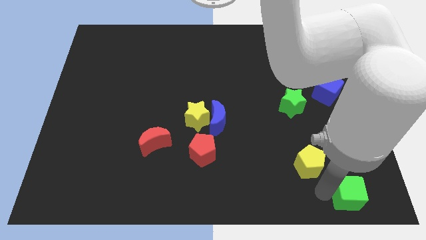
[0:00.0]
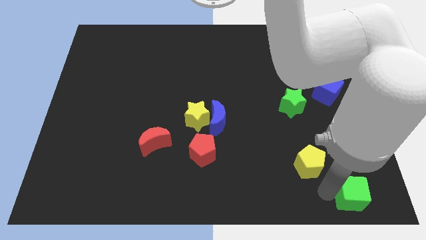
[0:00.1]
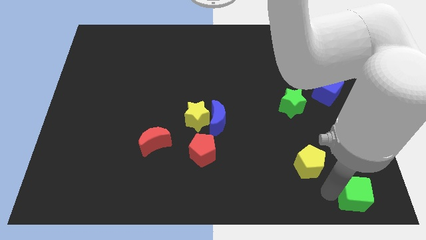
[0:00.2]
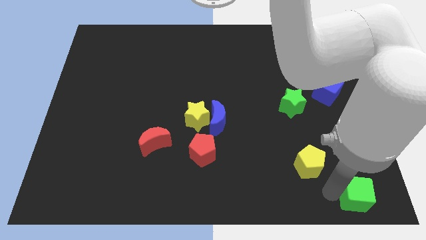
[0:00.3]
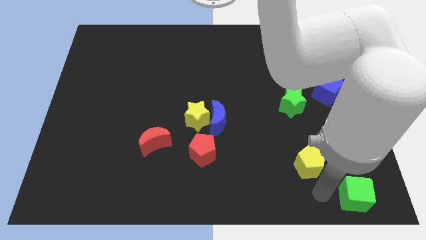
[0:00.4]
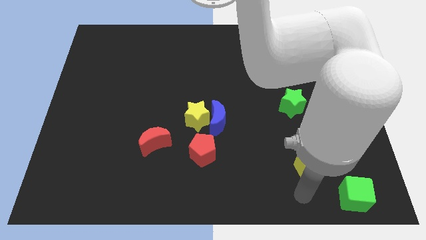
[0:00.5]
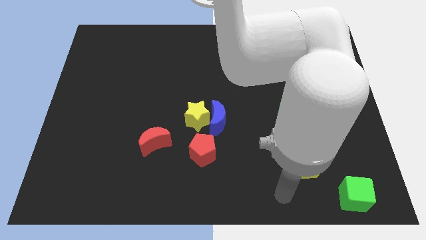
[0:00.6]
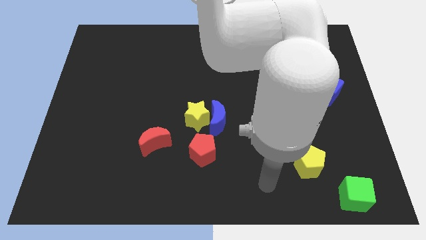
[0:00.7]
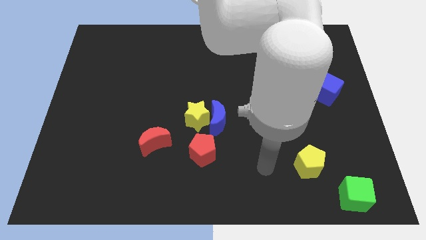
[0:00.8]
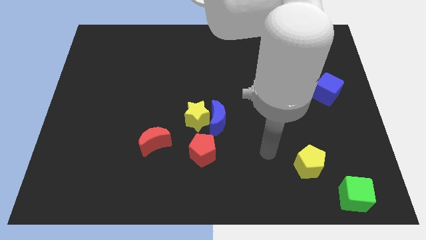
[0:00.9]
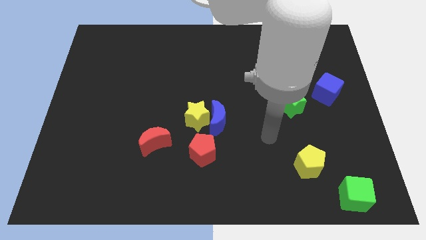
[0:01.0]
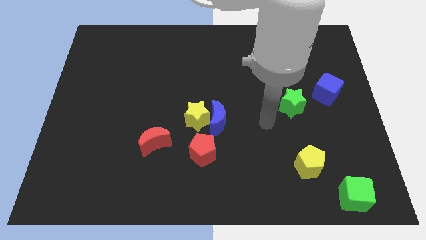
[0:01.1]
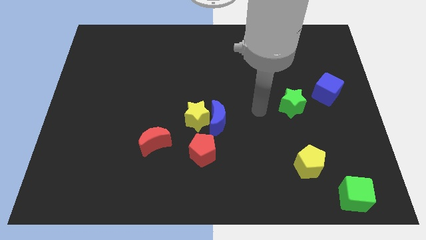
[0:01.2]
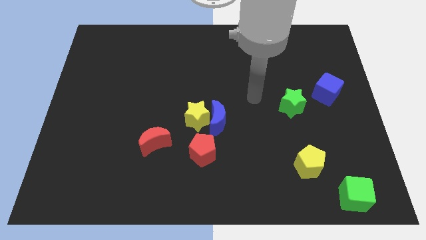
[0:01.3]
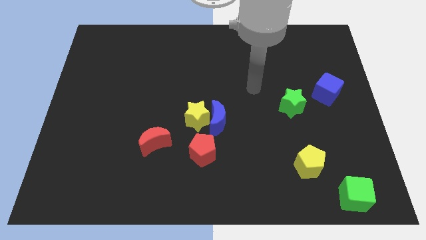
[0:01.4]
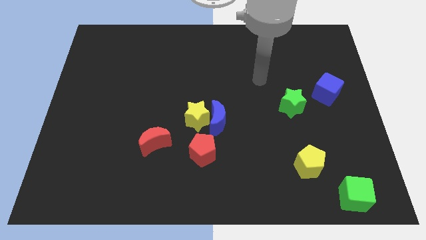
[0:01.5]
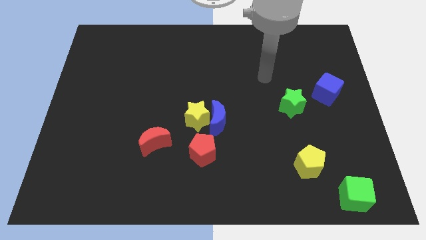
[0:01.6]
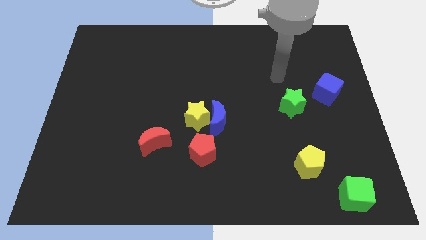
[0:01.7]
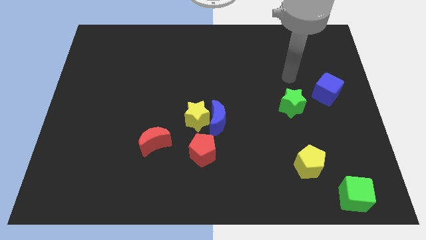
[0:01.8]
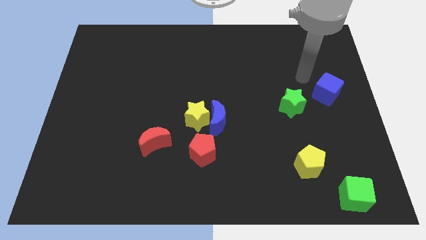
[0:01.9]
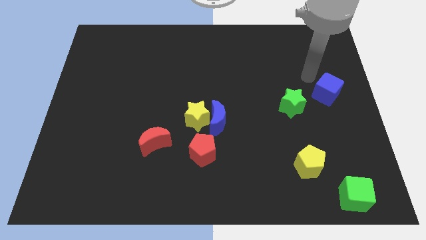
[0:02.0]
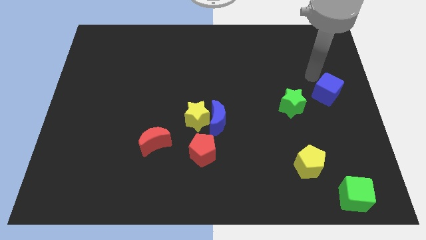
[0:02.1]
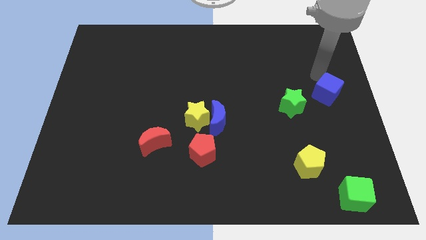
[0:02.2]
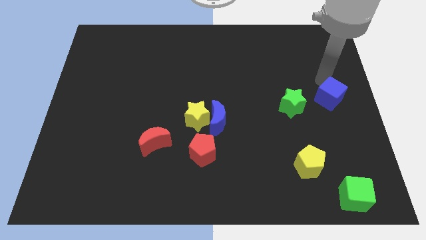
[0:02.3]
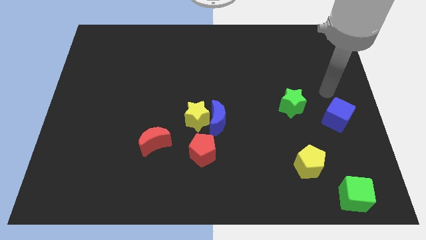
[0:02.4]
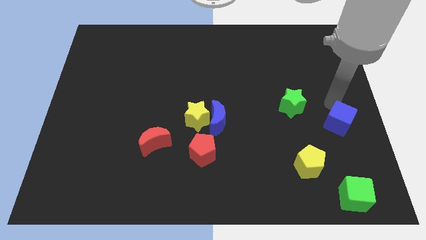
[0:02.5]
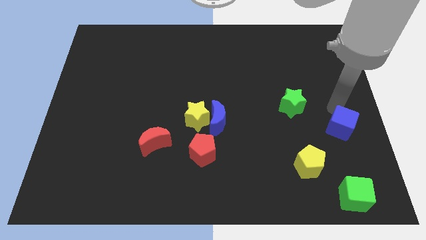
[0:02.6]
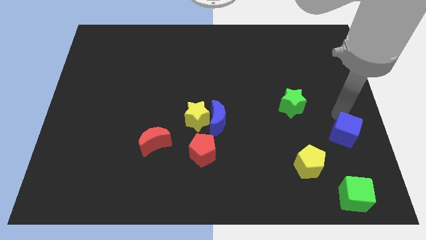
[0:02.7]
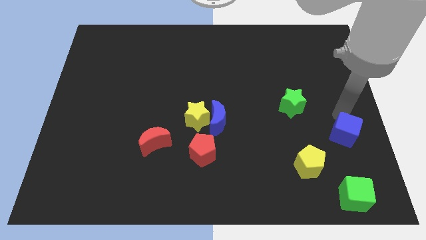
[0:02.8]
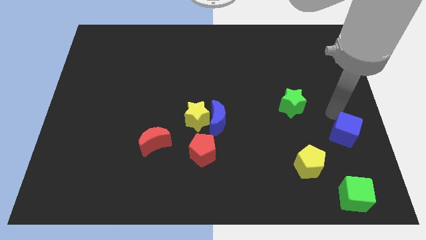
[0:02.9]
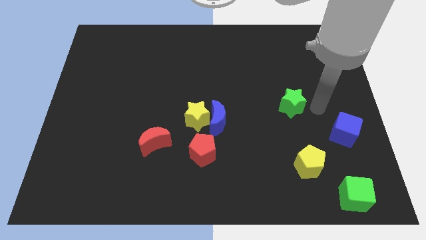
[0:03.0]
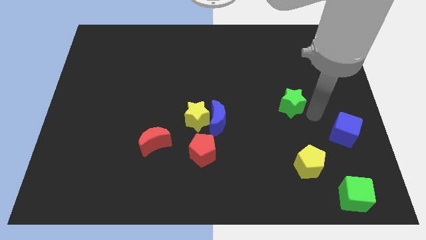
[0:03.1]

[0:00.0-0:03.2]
slightly move the blue cube towards down

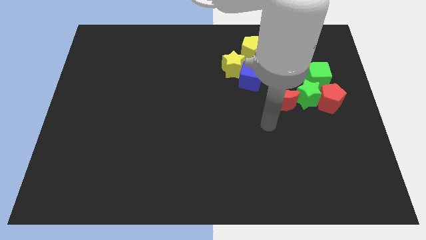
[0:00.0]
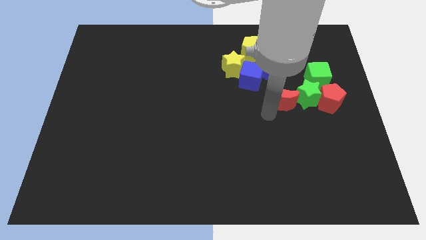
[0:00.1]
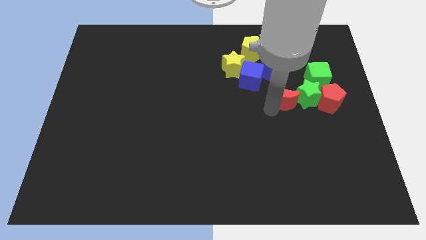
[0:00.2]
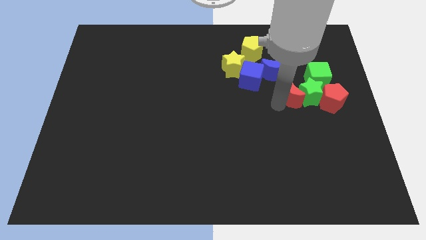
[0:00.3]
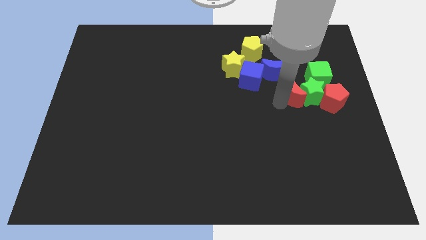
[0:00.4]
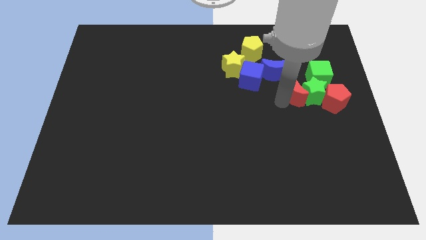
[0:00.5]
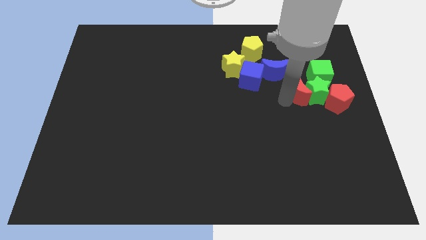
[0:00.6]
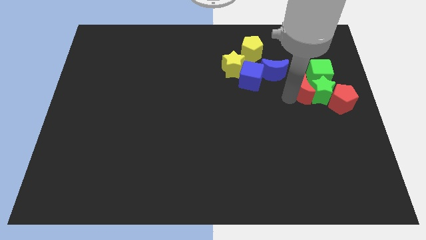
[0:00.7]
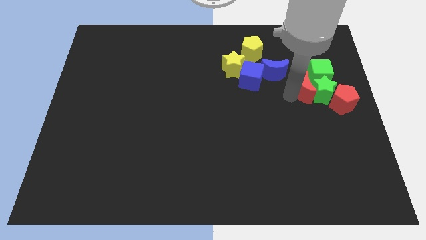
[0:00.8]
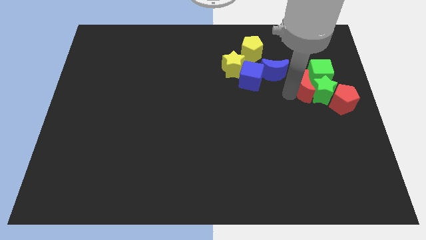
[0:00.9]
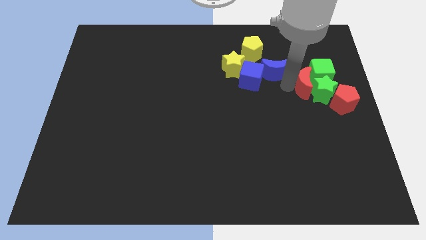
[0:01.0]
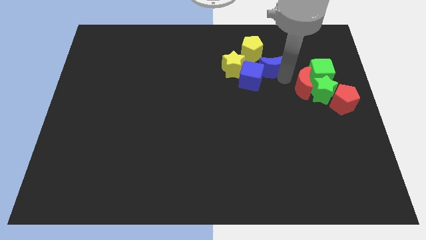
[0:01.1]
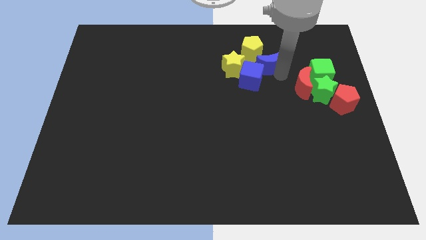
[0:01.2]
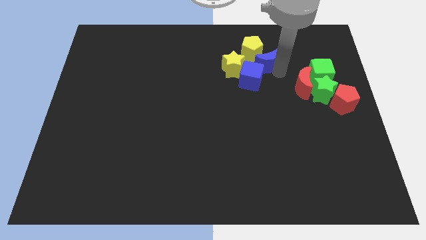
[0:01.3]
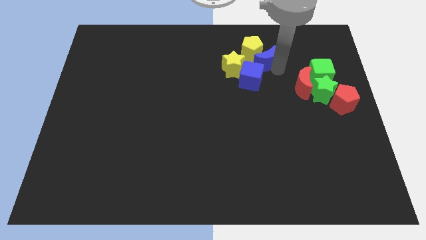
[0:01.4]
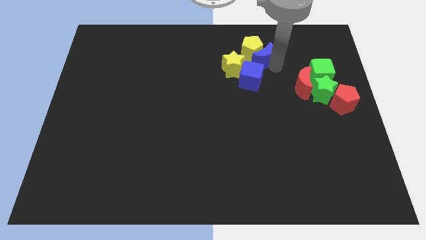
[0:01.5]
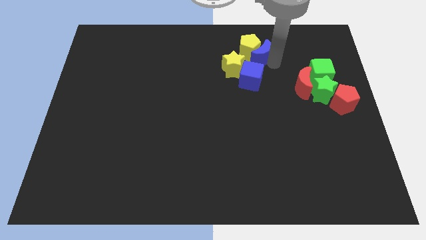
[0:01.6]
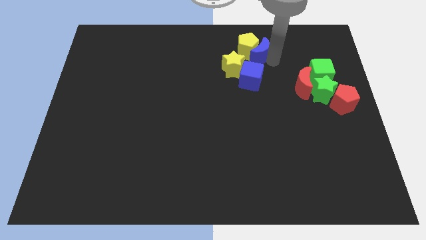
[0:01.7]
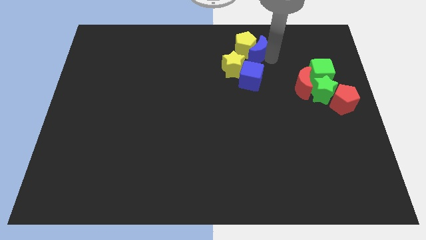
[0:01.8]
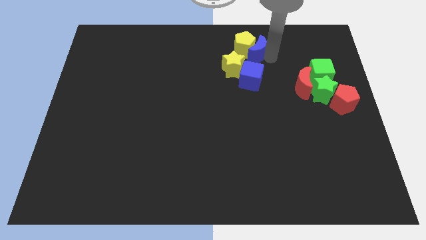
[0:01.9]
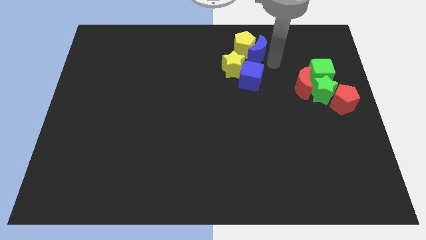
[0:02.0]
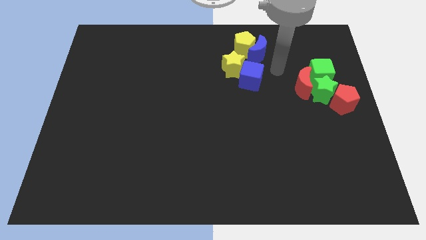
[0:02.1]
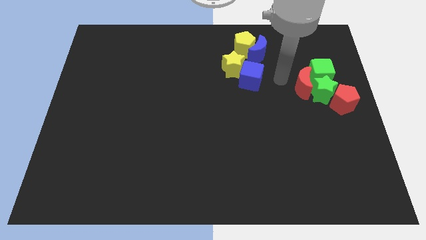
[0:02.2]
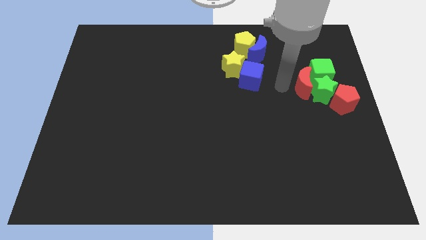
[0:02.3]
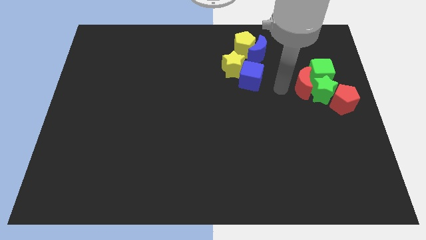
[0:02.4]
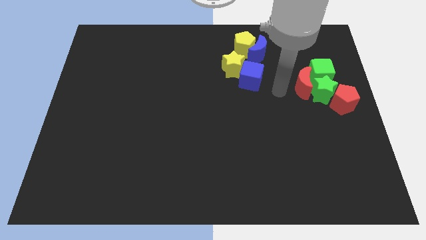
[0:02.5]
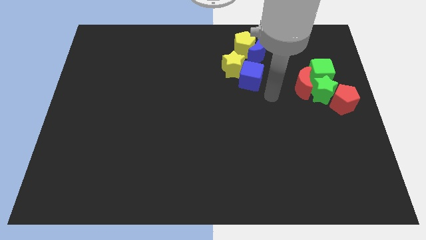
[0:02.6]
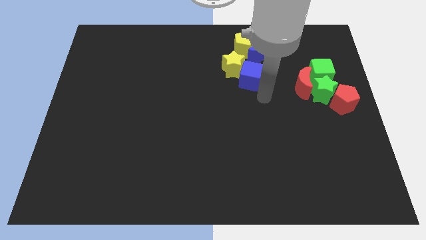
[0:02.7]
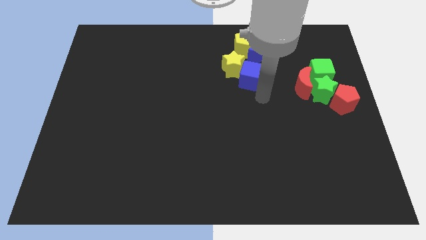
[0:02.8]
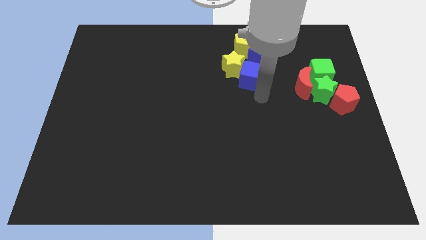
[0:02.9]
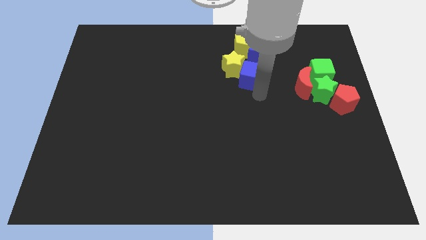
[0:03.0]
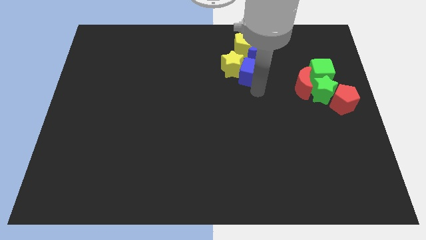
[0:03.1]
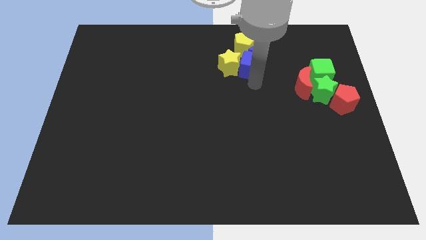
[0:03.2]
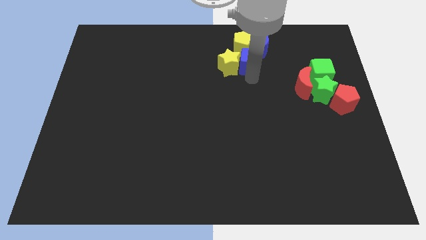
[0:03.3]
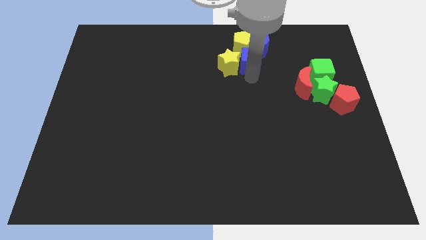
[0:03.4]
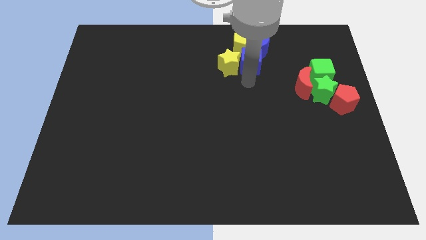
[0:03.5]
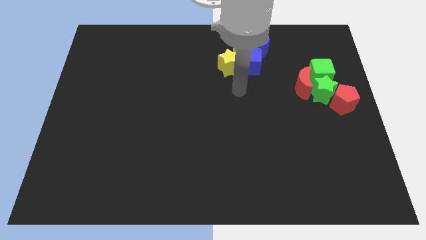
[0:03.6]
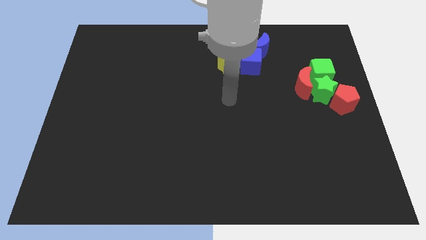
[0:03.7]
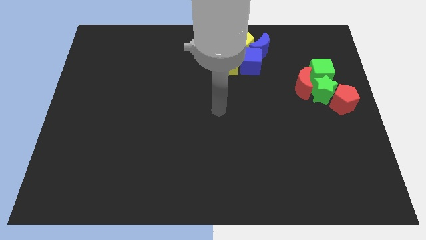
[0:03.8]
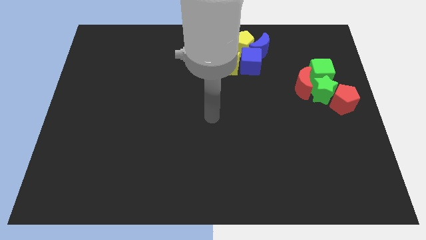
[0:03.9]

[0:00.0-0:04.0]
separate the blue blocks from the red and green blocks

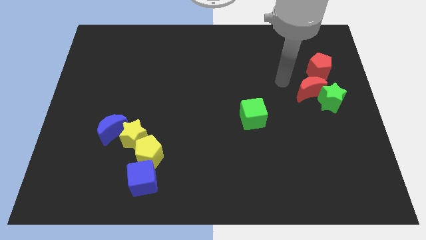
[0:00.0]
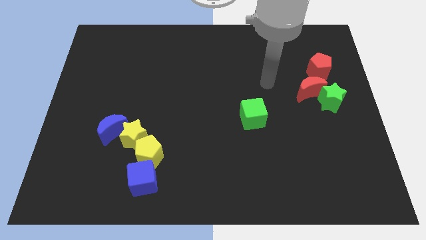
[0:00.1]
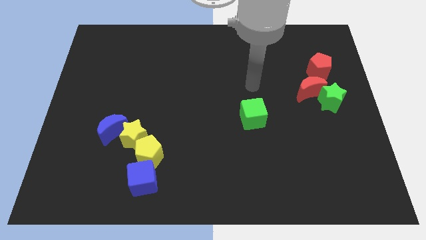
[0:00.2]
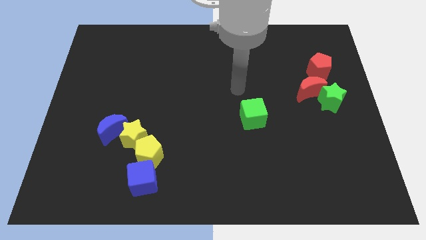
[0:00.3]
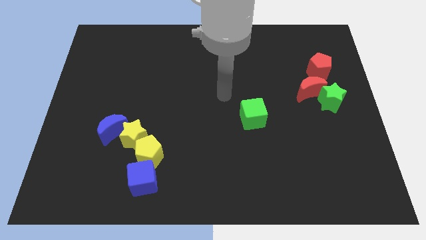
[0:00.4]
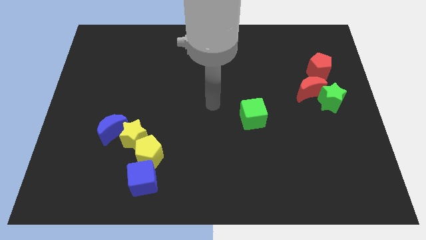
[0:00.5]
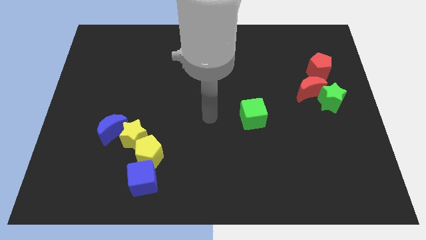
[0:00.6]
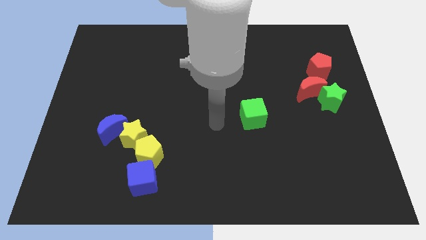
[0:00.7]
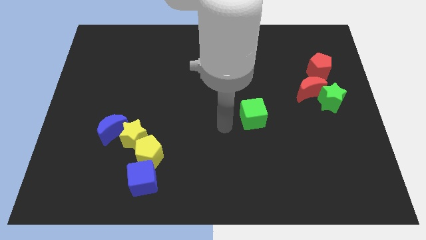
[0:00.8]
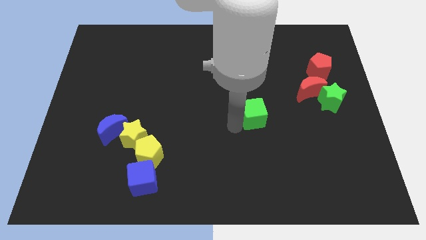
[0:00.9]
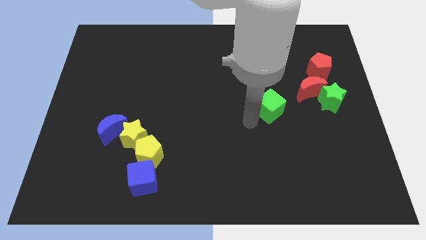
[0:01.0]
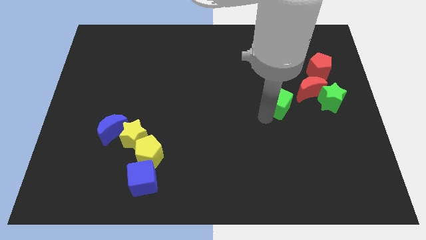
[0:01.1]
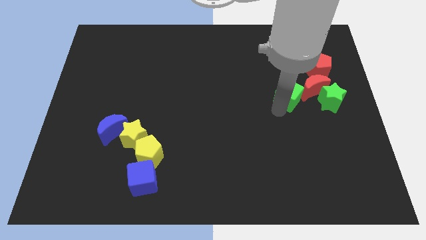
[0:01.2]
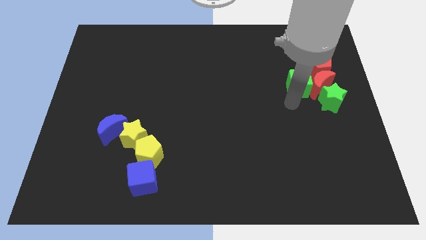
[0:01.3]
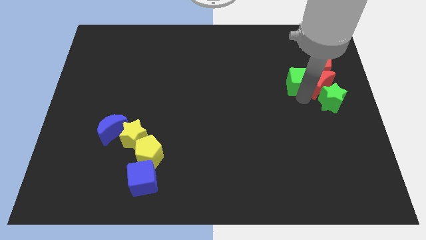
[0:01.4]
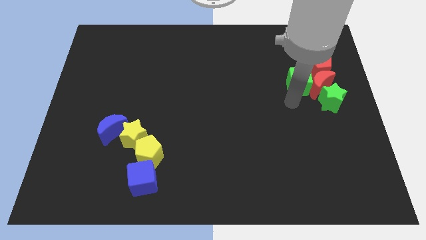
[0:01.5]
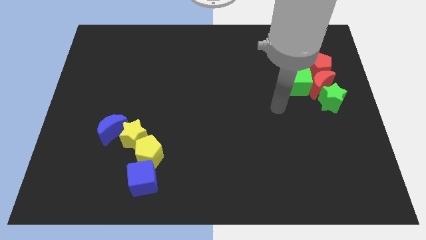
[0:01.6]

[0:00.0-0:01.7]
move the green cube into the red moon
